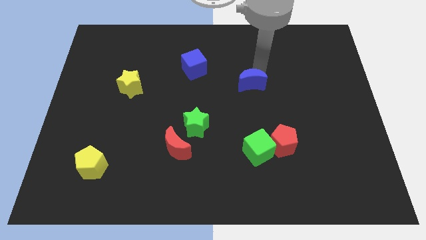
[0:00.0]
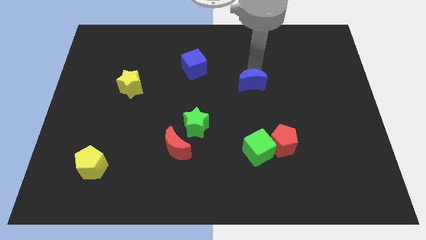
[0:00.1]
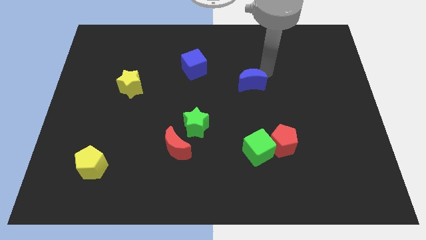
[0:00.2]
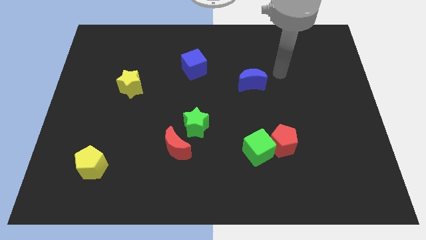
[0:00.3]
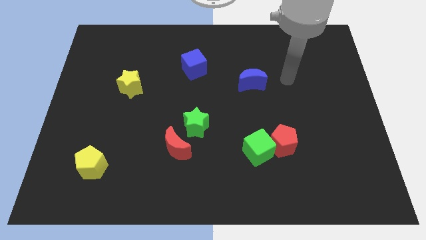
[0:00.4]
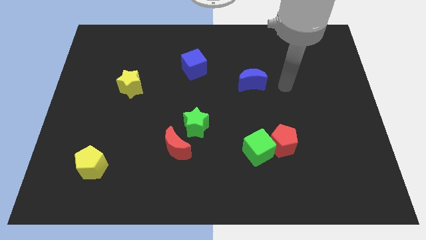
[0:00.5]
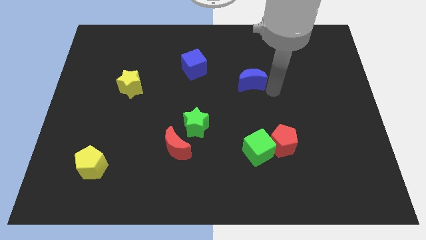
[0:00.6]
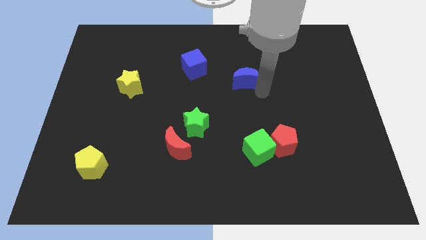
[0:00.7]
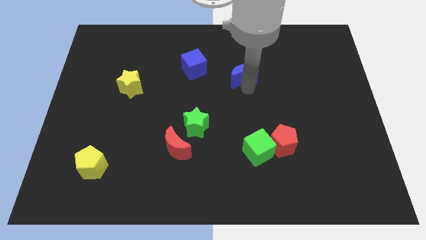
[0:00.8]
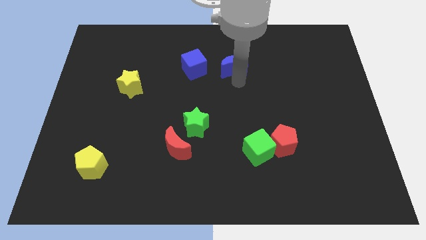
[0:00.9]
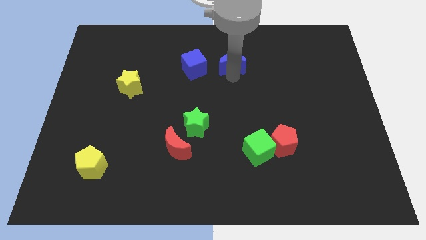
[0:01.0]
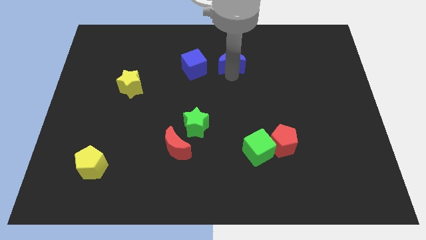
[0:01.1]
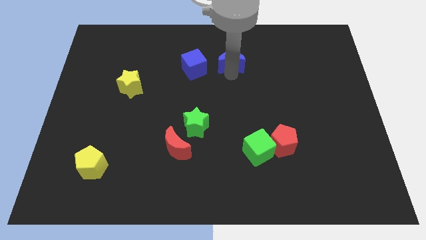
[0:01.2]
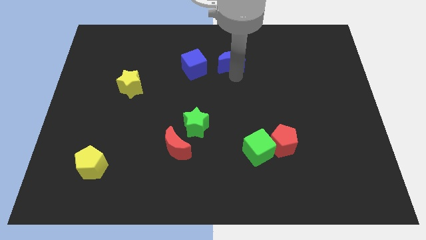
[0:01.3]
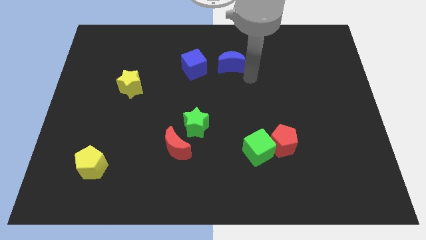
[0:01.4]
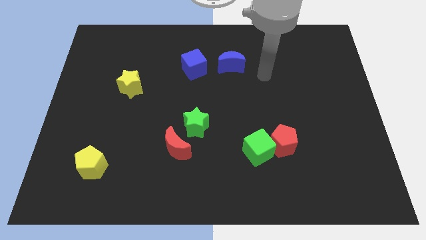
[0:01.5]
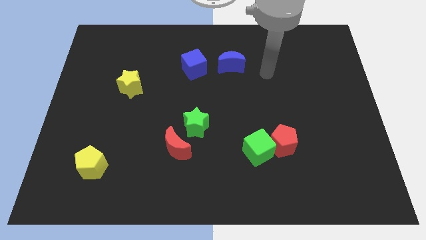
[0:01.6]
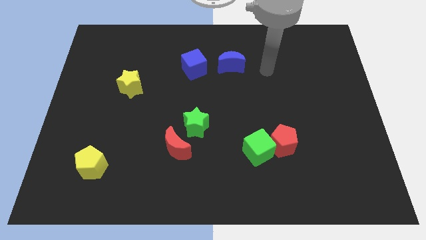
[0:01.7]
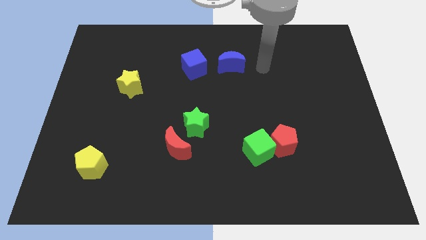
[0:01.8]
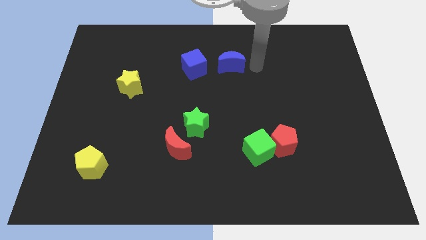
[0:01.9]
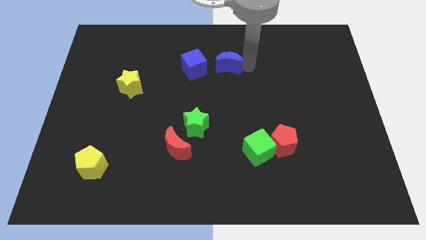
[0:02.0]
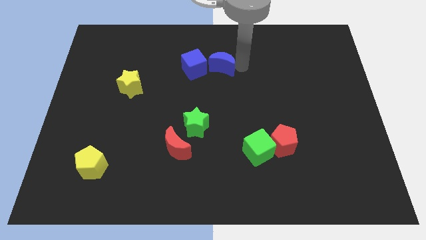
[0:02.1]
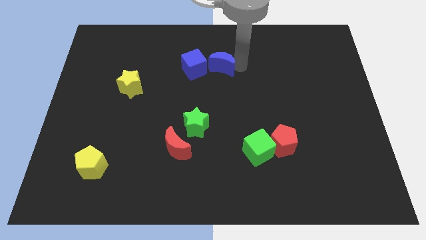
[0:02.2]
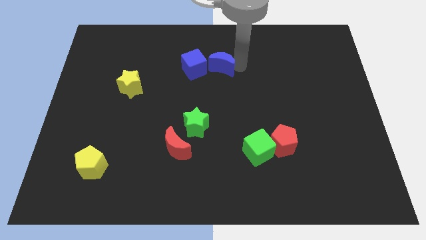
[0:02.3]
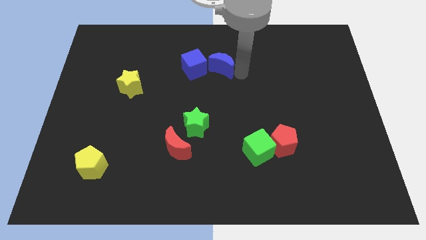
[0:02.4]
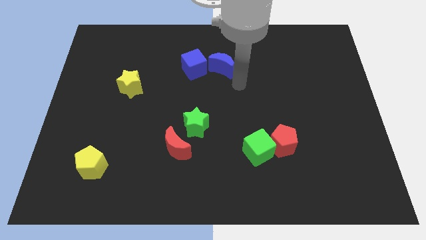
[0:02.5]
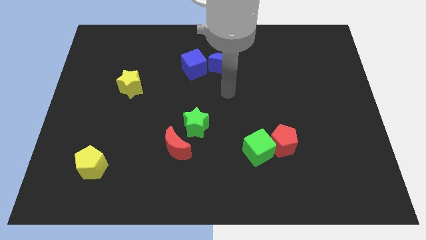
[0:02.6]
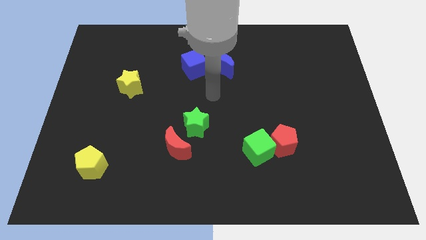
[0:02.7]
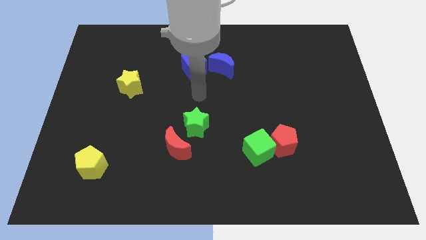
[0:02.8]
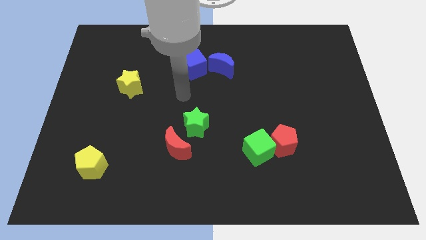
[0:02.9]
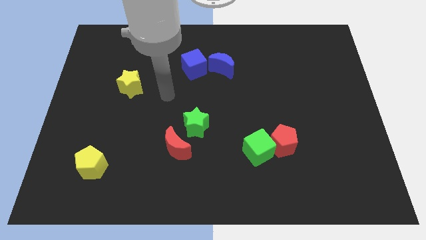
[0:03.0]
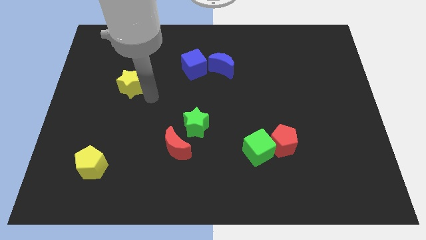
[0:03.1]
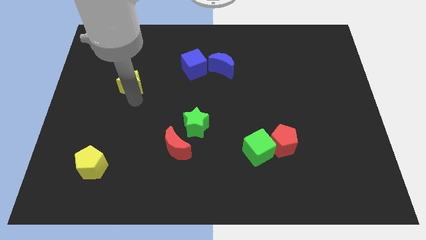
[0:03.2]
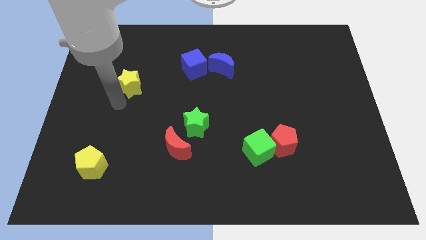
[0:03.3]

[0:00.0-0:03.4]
move the blue moon to the right of the blue cube

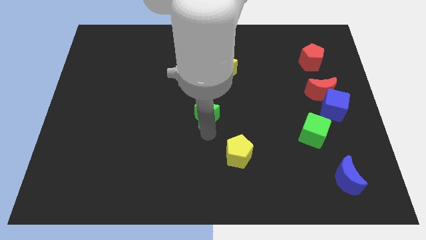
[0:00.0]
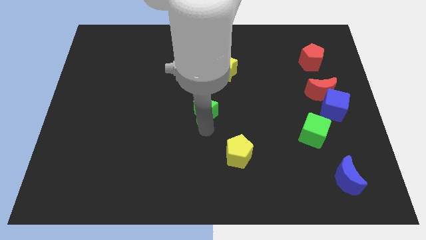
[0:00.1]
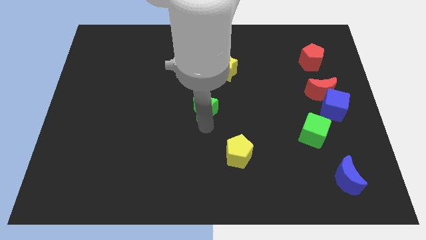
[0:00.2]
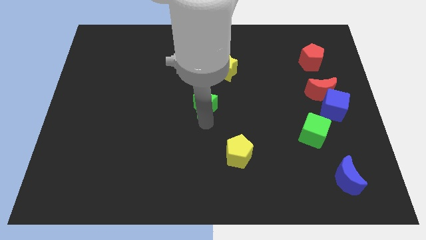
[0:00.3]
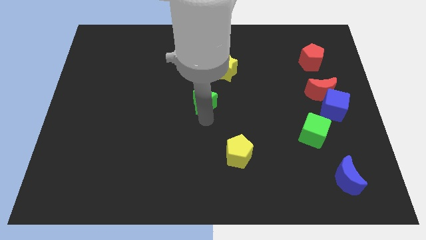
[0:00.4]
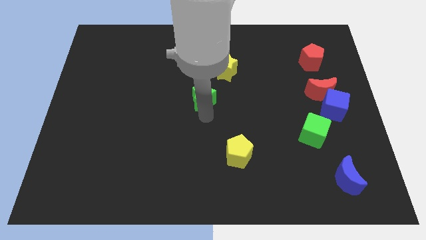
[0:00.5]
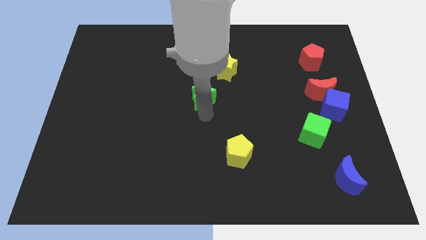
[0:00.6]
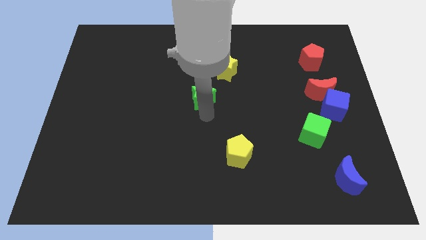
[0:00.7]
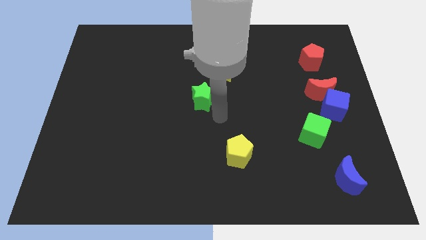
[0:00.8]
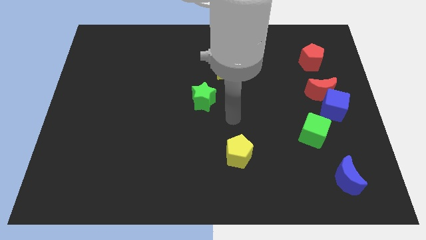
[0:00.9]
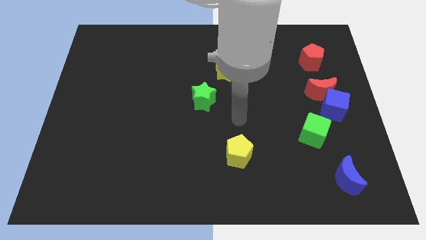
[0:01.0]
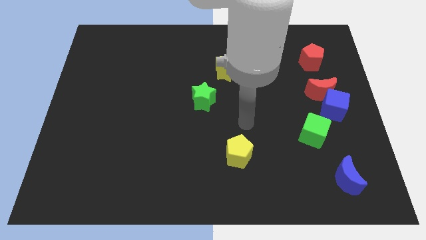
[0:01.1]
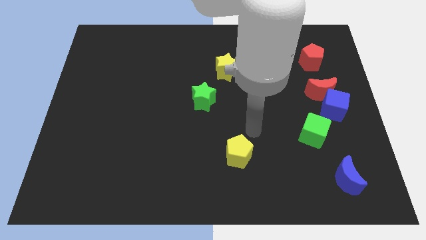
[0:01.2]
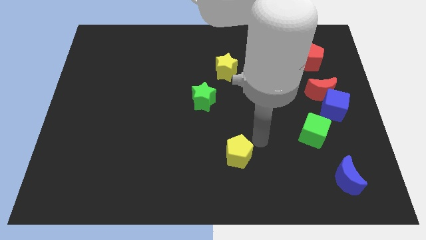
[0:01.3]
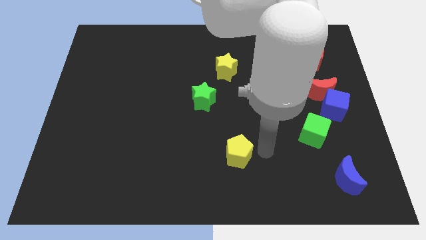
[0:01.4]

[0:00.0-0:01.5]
push the green star to the center of the board

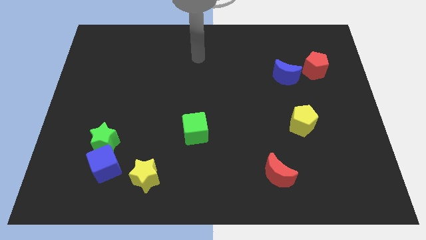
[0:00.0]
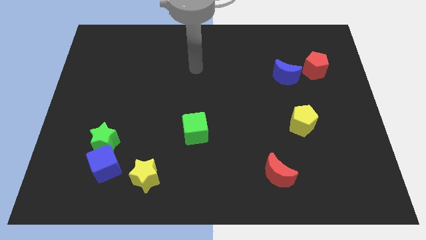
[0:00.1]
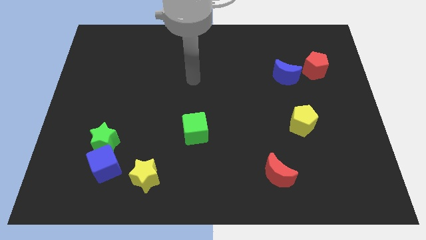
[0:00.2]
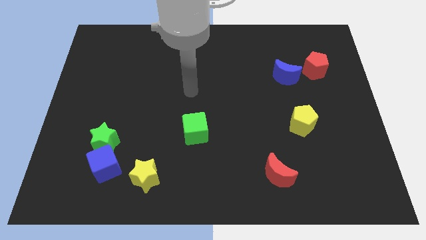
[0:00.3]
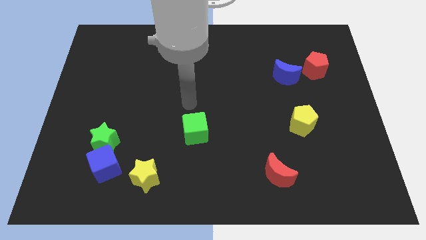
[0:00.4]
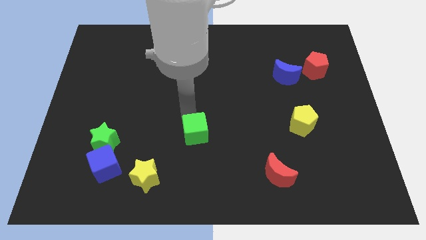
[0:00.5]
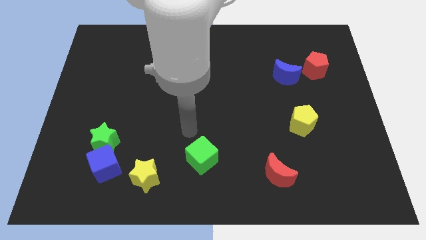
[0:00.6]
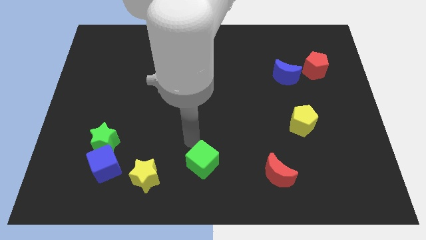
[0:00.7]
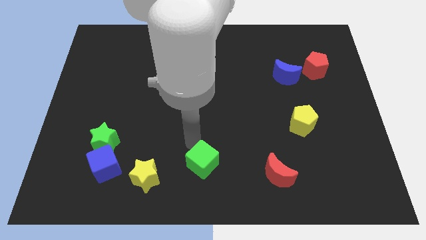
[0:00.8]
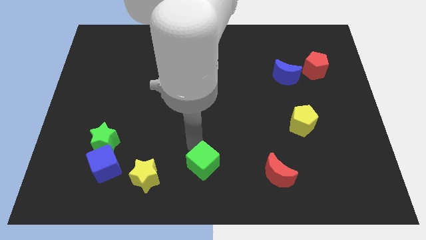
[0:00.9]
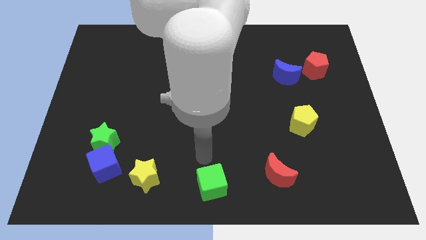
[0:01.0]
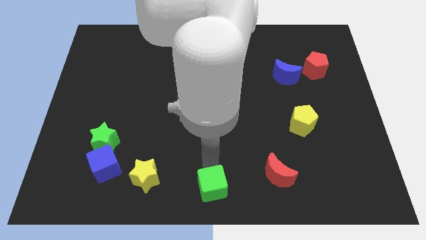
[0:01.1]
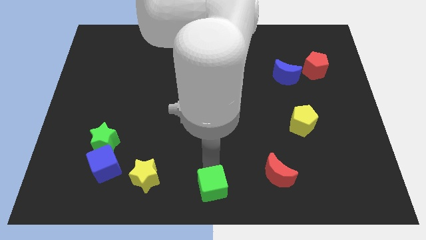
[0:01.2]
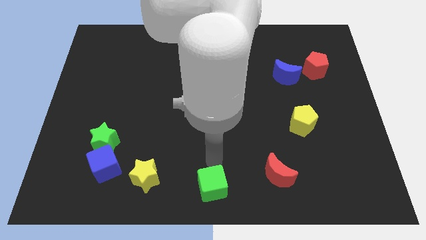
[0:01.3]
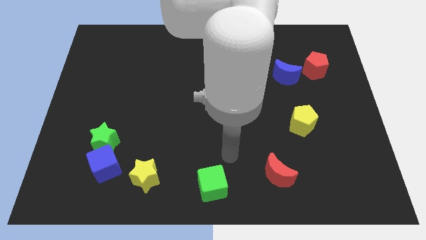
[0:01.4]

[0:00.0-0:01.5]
move the green cube towards the right of yellow star

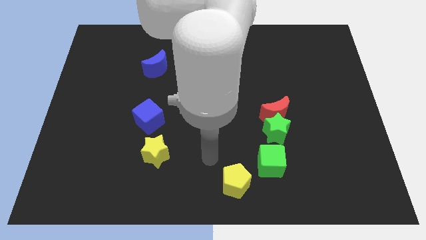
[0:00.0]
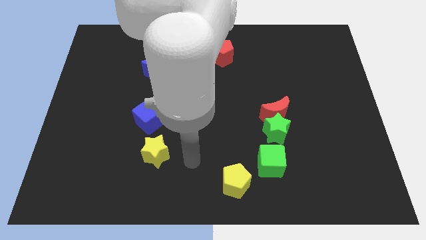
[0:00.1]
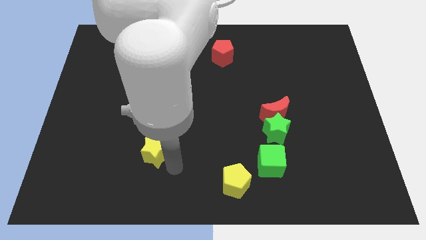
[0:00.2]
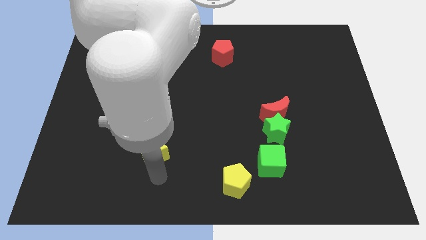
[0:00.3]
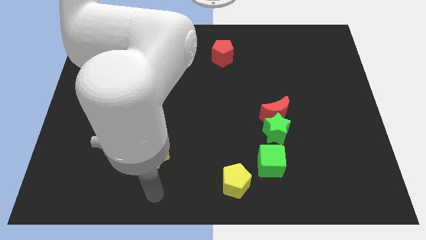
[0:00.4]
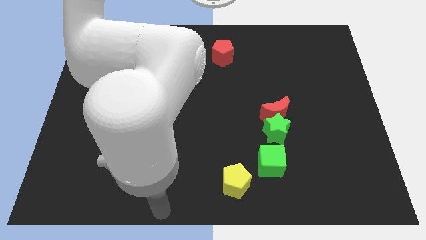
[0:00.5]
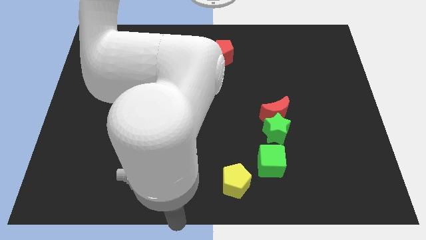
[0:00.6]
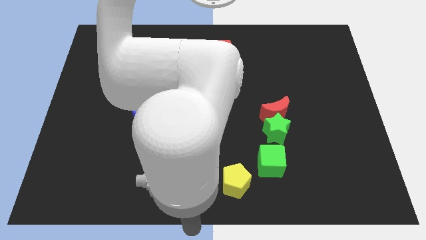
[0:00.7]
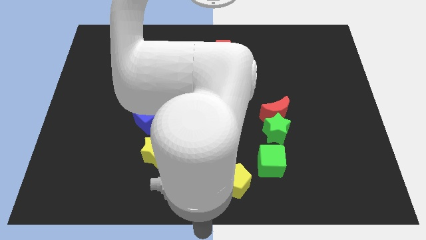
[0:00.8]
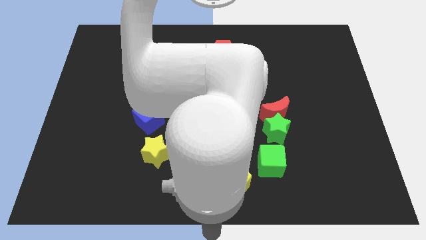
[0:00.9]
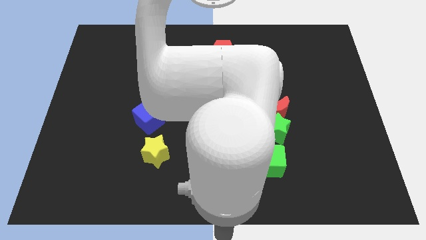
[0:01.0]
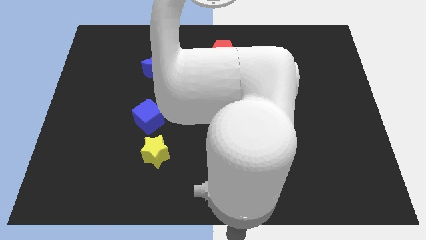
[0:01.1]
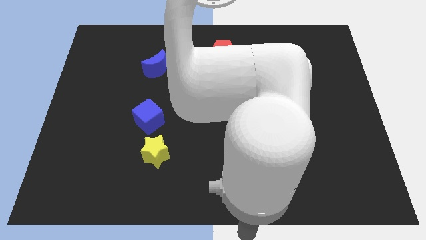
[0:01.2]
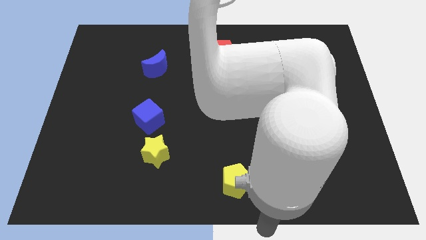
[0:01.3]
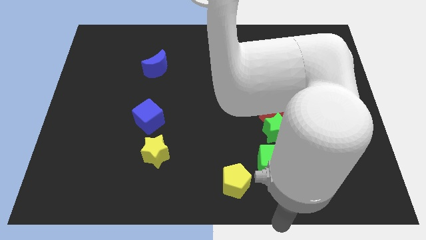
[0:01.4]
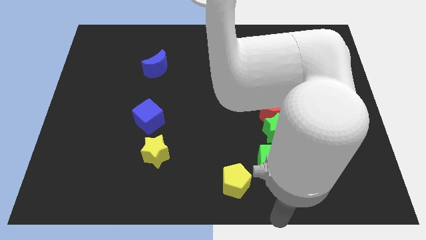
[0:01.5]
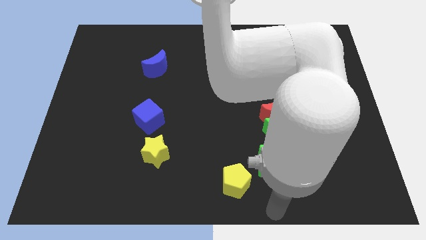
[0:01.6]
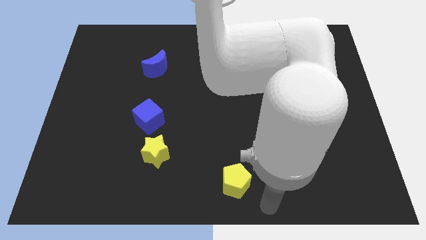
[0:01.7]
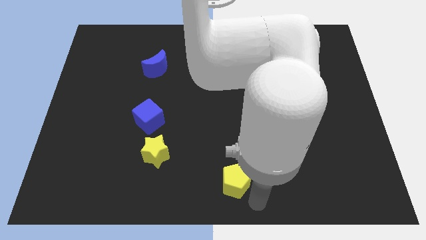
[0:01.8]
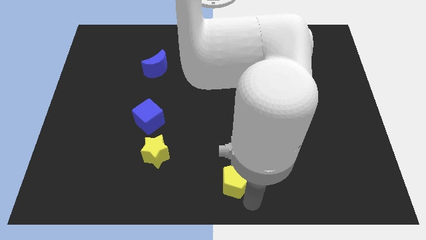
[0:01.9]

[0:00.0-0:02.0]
point your arm at the bottom of the yellow pentagon

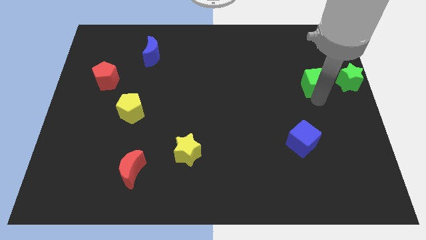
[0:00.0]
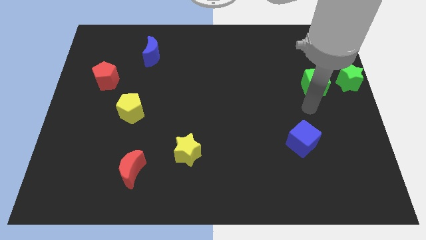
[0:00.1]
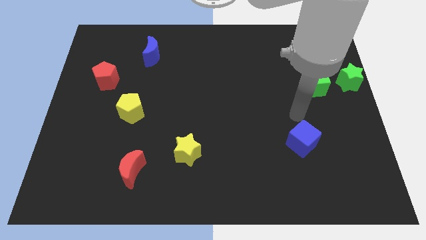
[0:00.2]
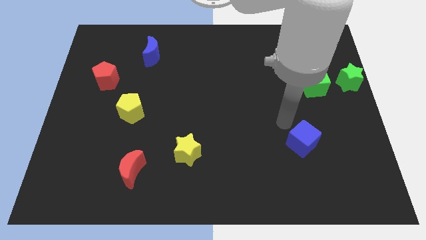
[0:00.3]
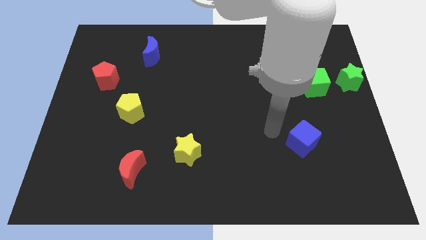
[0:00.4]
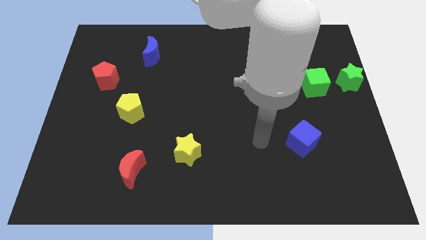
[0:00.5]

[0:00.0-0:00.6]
move your arm to the left of the blue cube
